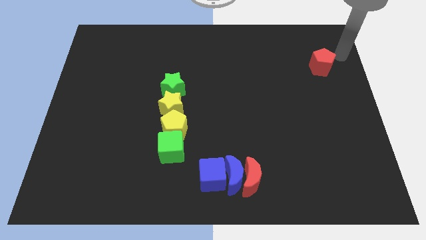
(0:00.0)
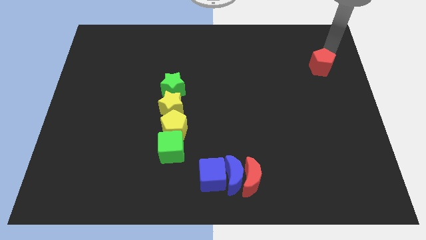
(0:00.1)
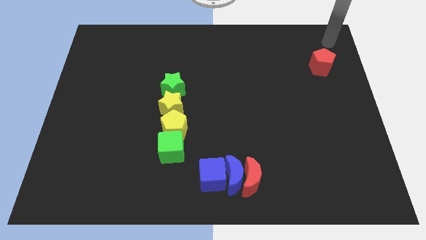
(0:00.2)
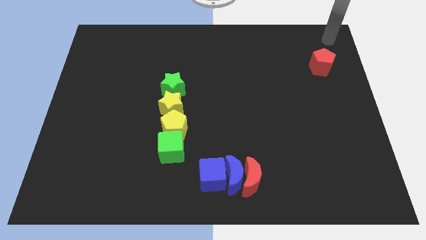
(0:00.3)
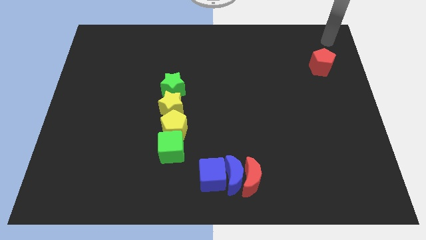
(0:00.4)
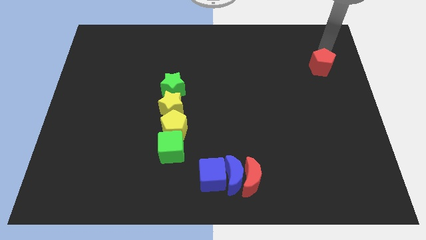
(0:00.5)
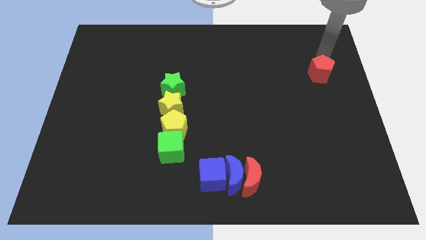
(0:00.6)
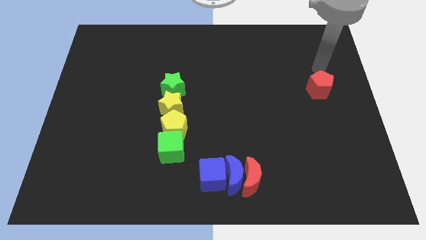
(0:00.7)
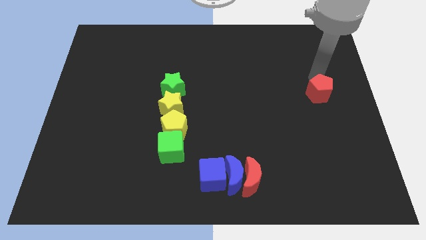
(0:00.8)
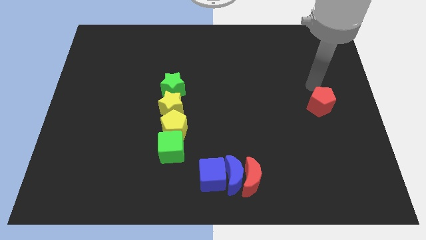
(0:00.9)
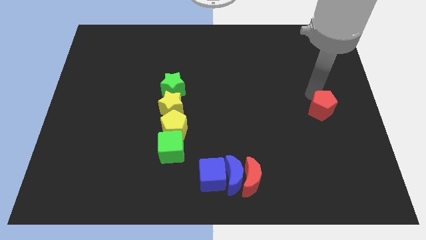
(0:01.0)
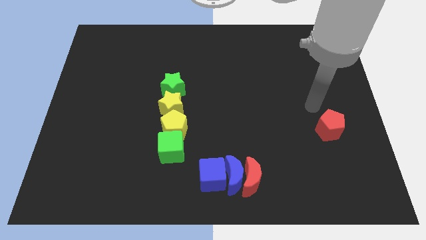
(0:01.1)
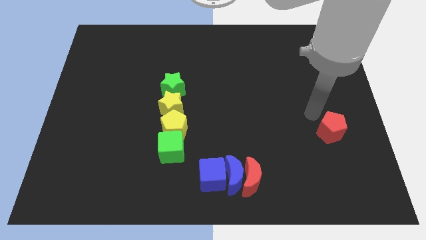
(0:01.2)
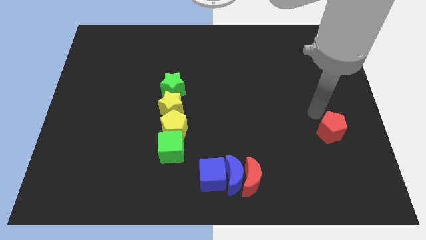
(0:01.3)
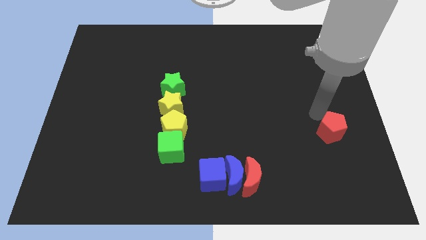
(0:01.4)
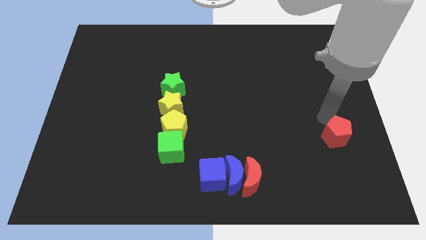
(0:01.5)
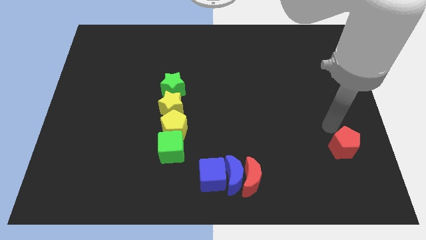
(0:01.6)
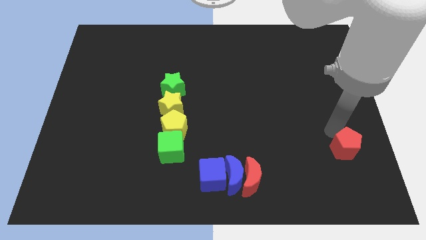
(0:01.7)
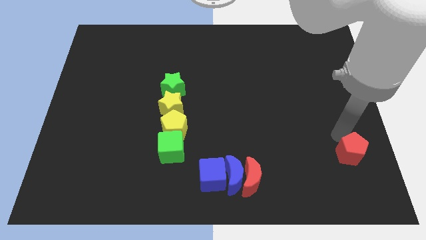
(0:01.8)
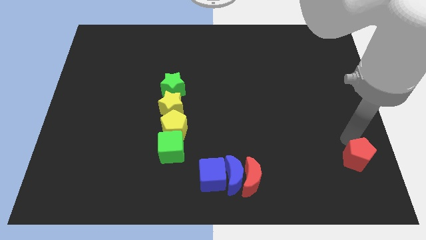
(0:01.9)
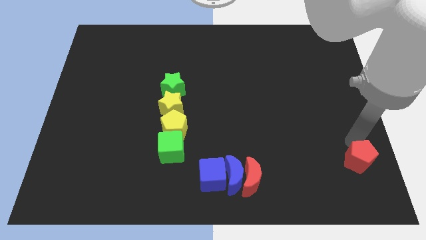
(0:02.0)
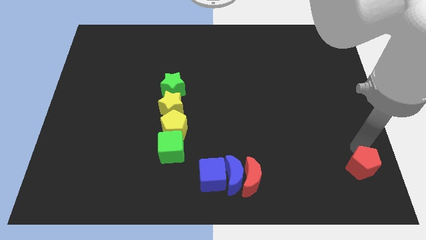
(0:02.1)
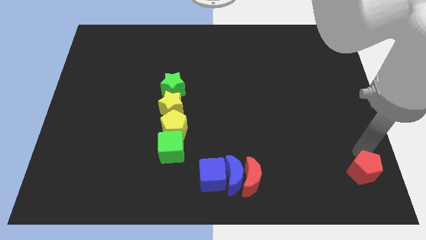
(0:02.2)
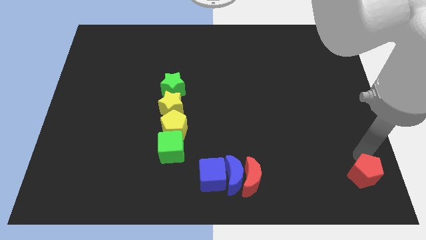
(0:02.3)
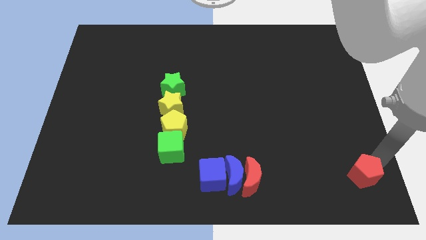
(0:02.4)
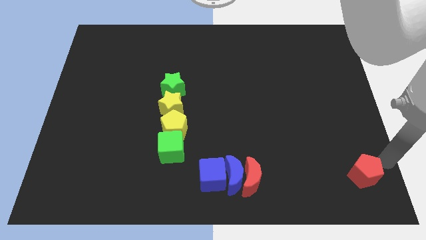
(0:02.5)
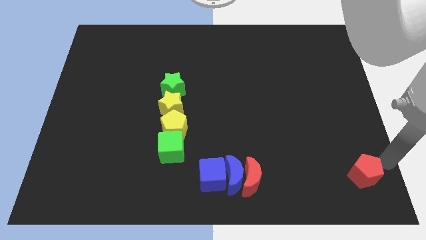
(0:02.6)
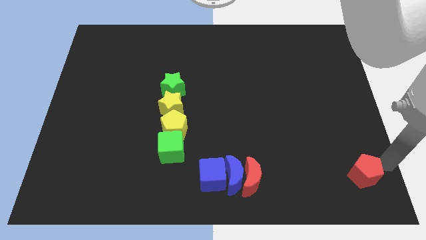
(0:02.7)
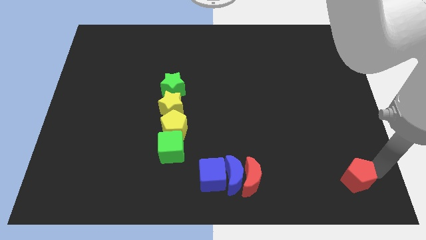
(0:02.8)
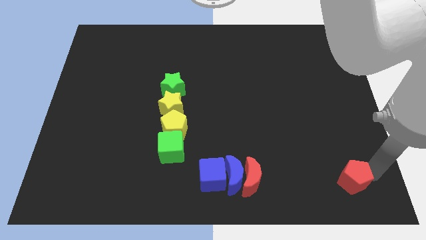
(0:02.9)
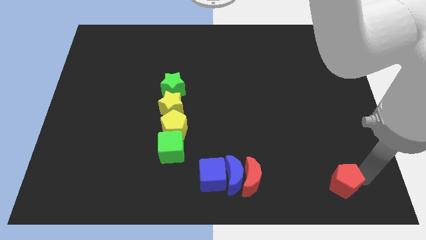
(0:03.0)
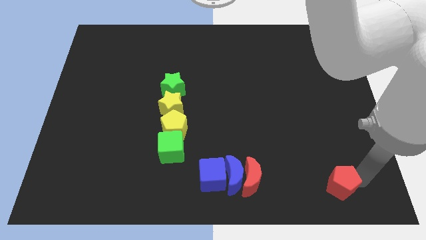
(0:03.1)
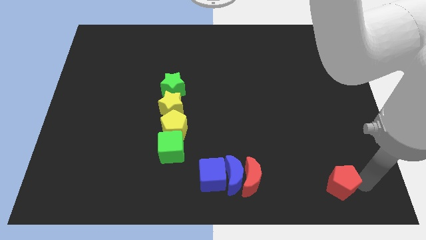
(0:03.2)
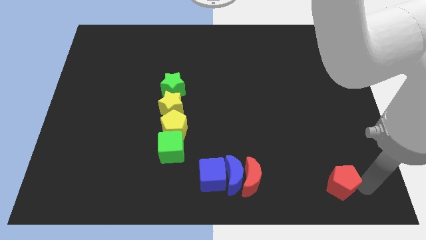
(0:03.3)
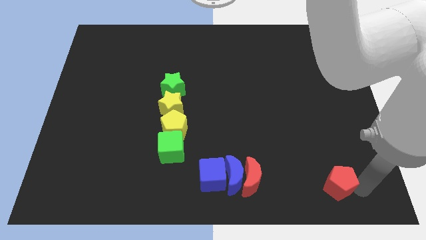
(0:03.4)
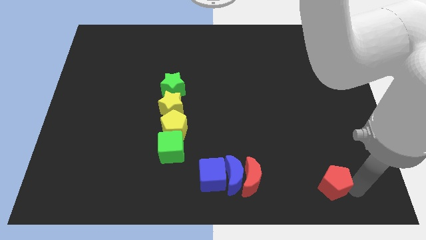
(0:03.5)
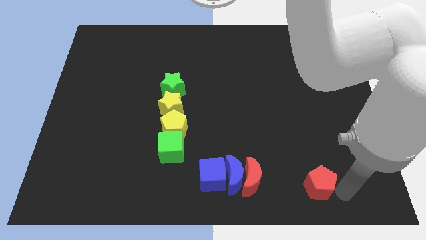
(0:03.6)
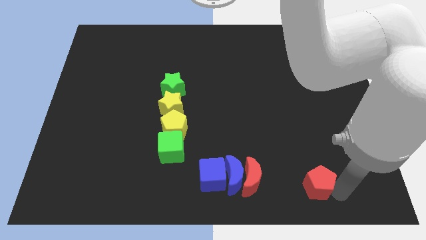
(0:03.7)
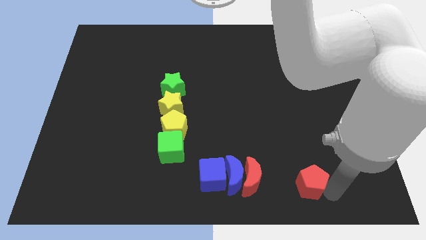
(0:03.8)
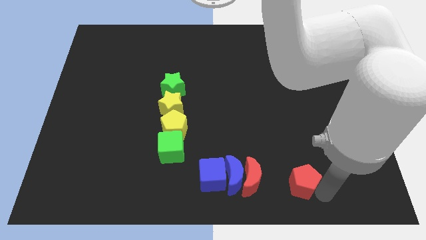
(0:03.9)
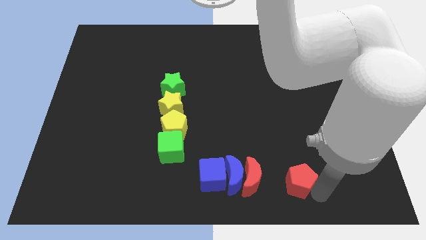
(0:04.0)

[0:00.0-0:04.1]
slide the red pentagon towards the right side of the red crescent

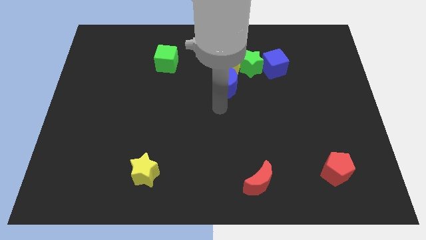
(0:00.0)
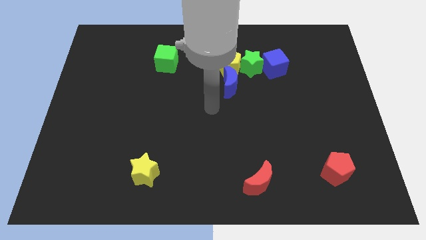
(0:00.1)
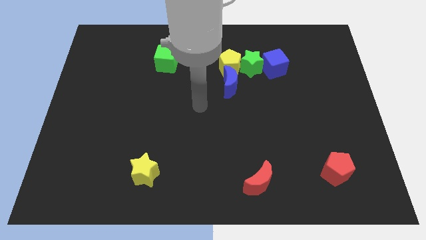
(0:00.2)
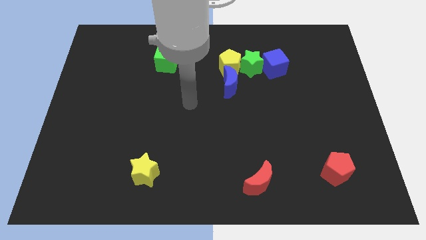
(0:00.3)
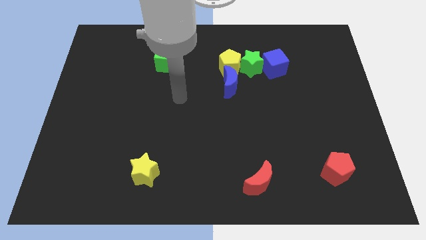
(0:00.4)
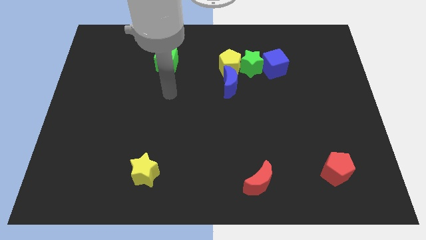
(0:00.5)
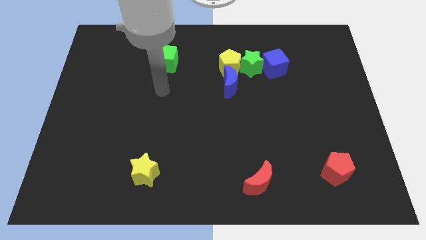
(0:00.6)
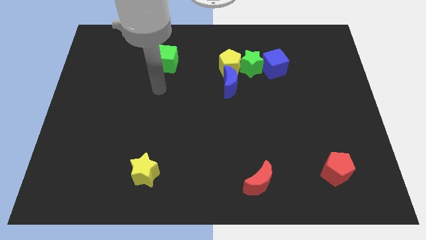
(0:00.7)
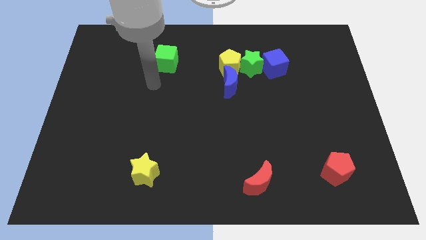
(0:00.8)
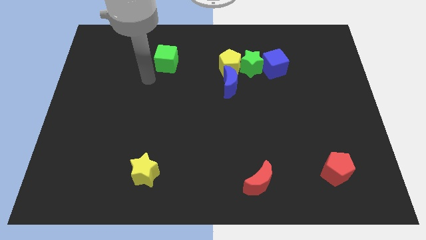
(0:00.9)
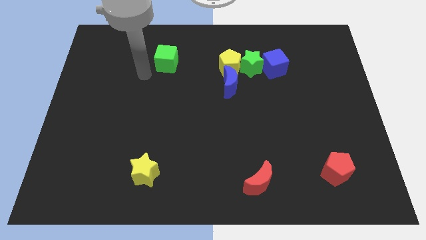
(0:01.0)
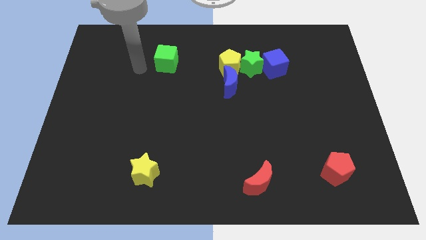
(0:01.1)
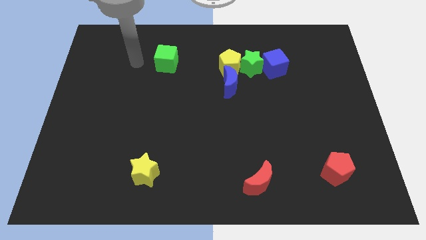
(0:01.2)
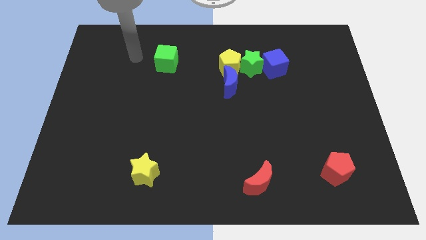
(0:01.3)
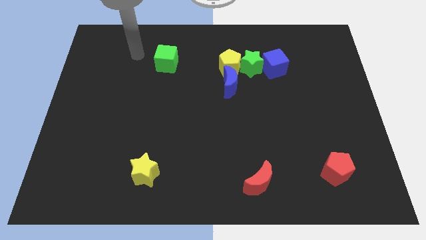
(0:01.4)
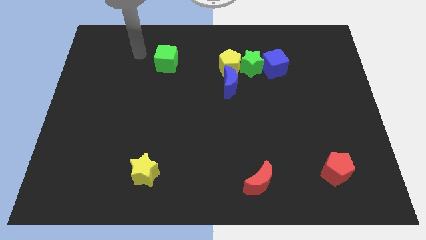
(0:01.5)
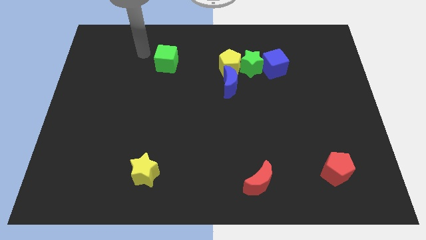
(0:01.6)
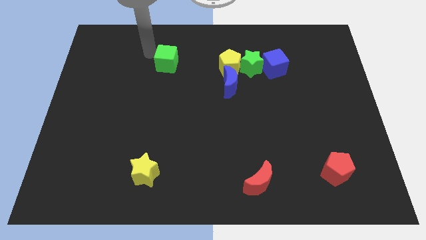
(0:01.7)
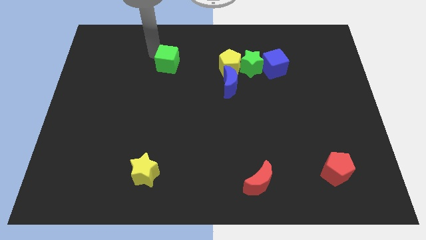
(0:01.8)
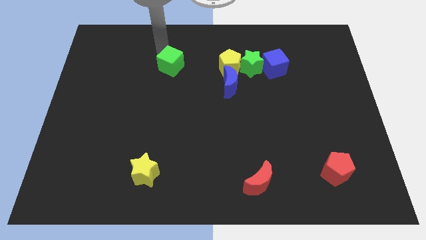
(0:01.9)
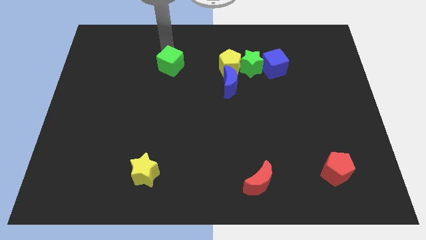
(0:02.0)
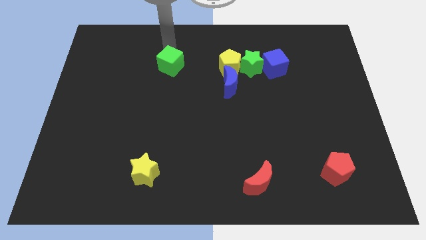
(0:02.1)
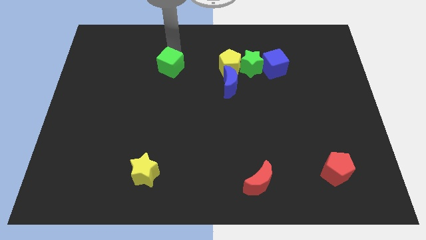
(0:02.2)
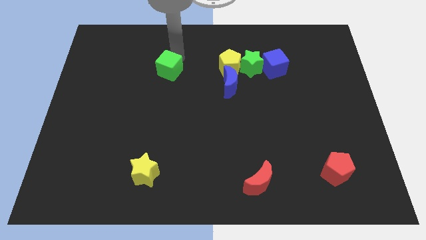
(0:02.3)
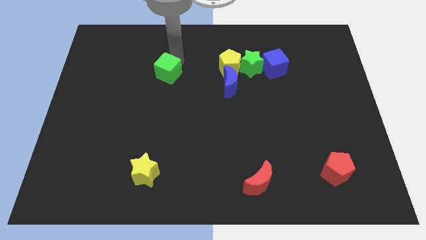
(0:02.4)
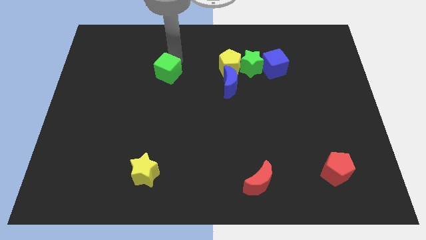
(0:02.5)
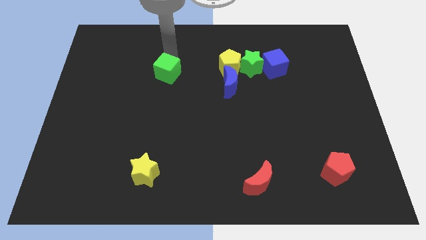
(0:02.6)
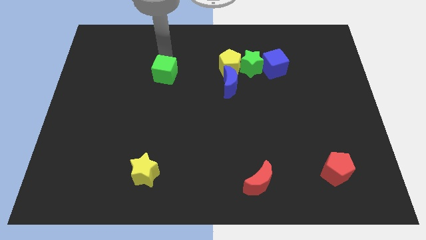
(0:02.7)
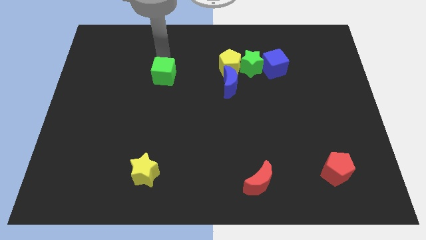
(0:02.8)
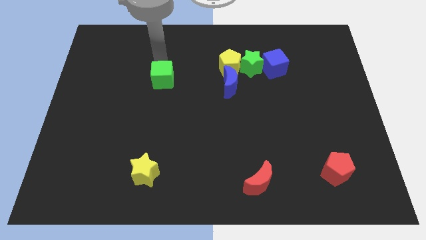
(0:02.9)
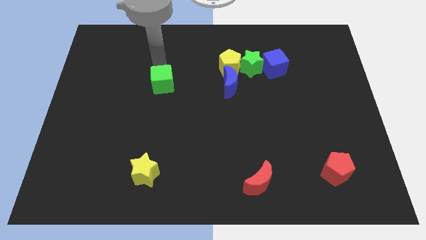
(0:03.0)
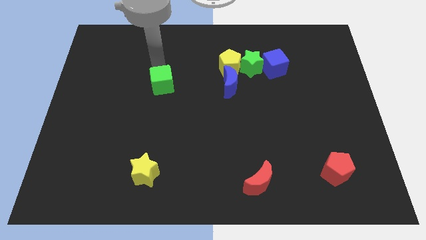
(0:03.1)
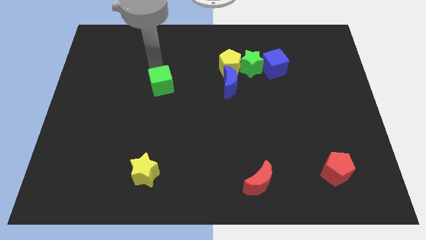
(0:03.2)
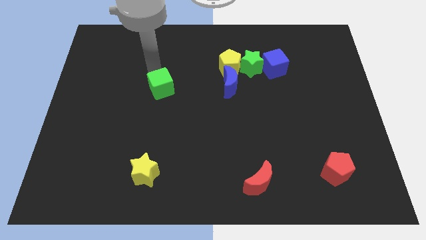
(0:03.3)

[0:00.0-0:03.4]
slightly push the green cube towards the bottom of the board

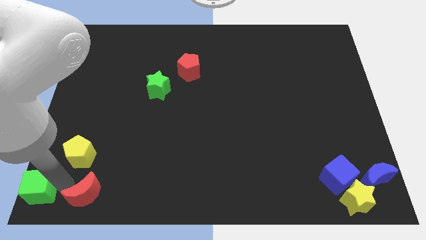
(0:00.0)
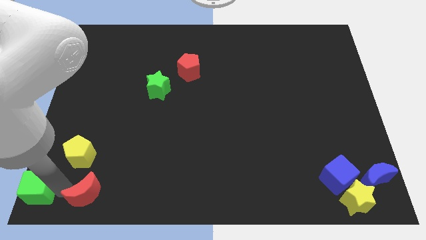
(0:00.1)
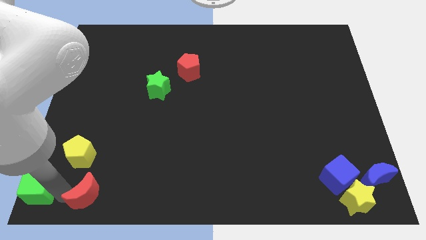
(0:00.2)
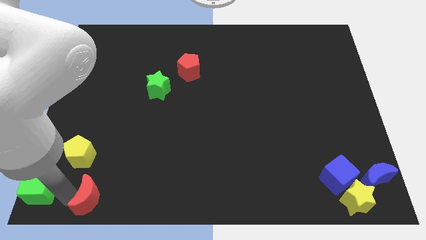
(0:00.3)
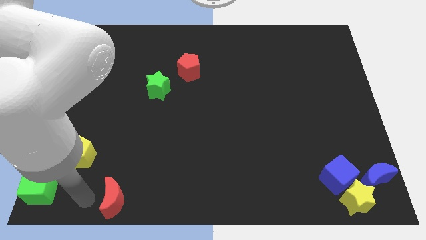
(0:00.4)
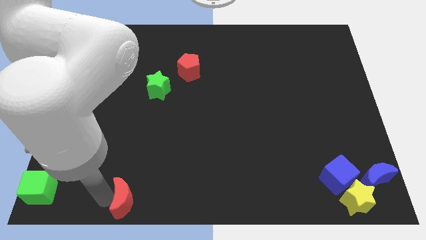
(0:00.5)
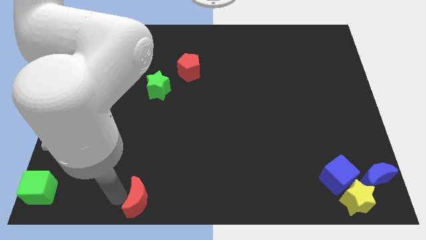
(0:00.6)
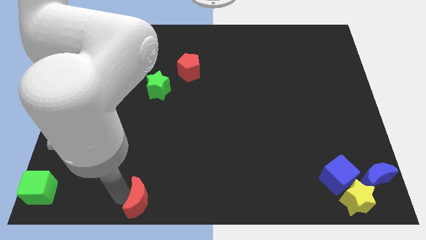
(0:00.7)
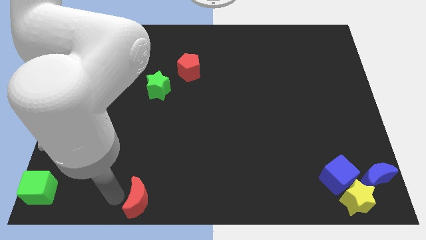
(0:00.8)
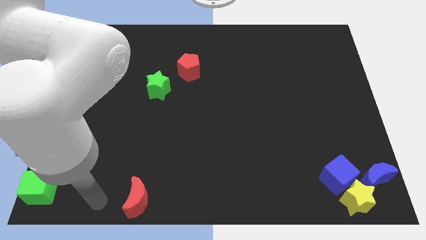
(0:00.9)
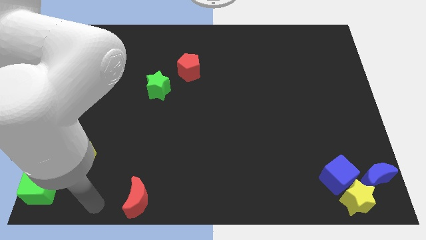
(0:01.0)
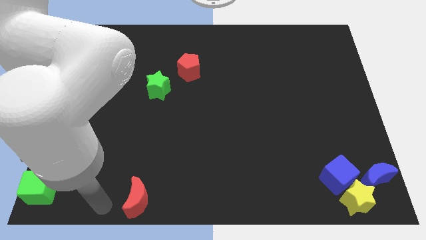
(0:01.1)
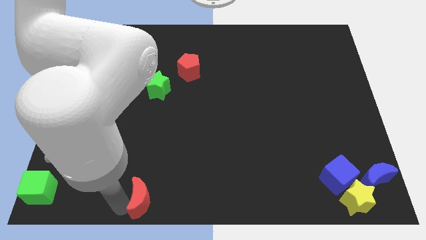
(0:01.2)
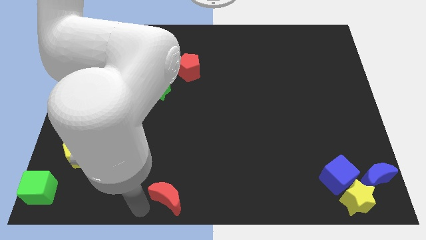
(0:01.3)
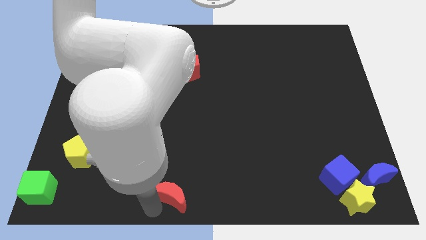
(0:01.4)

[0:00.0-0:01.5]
move the red crescent to the right

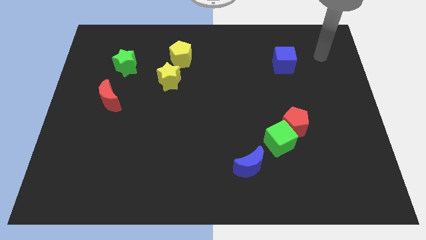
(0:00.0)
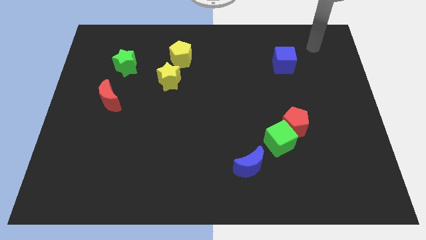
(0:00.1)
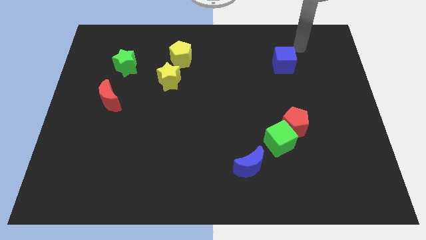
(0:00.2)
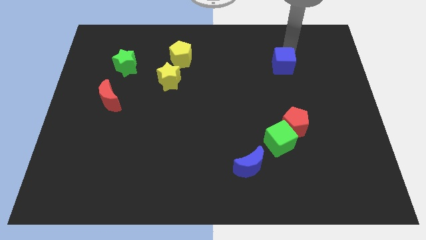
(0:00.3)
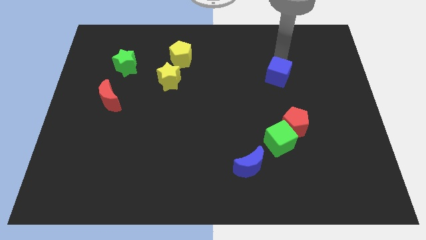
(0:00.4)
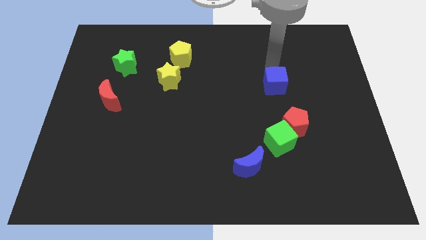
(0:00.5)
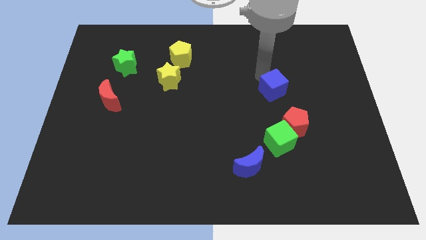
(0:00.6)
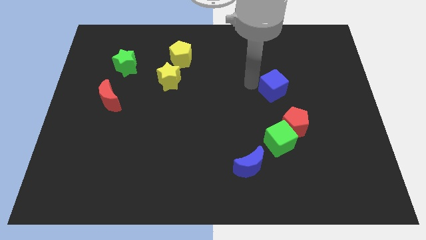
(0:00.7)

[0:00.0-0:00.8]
place the blue cube diagonally top left to the red pentagon
